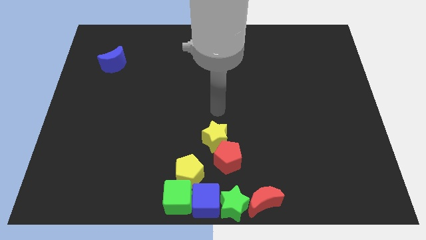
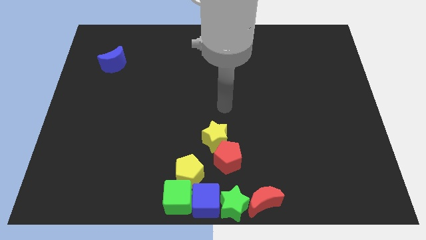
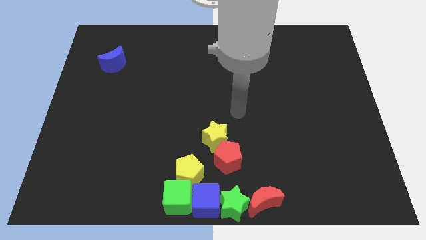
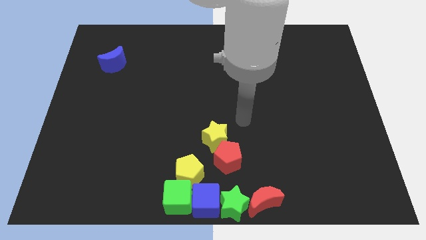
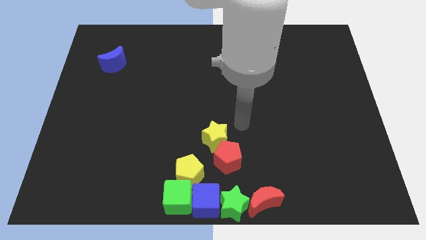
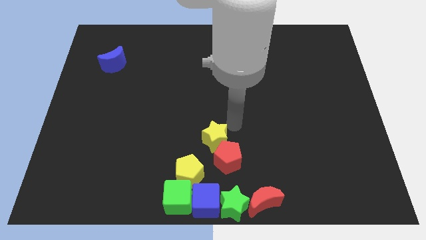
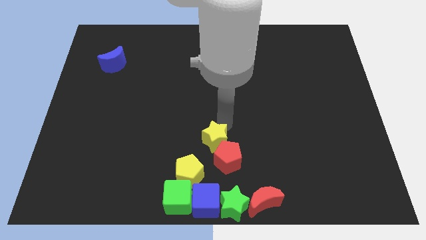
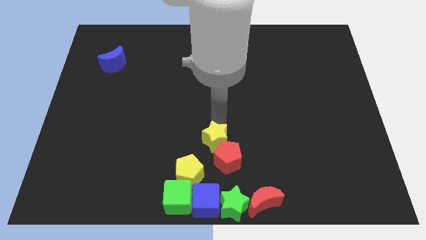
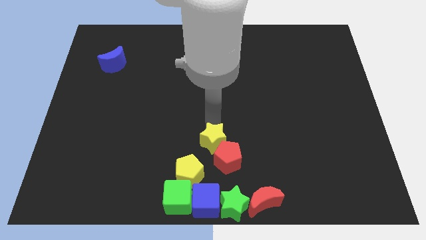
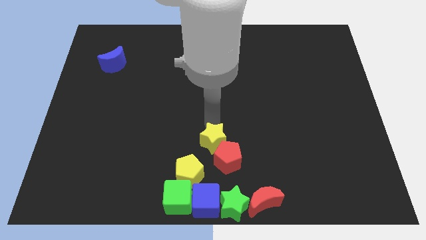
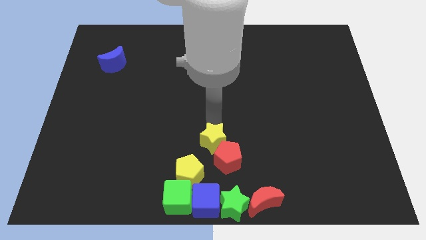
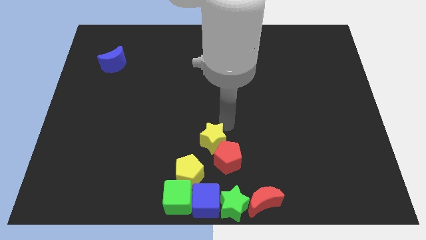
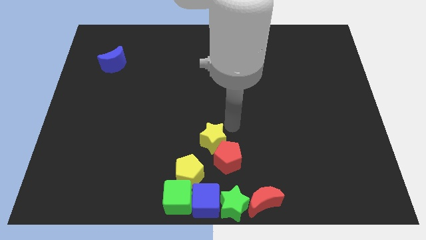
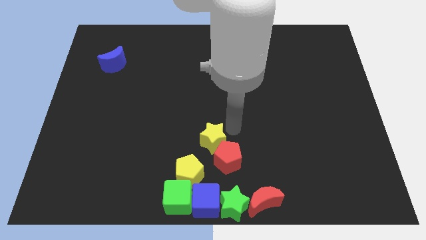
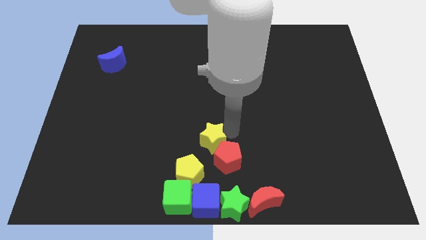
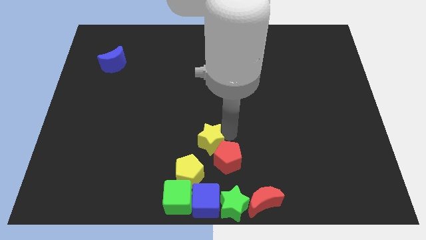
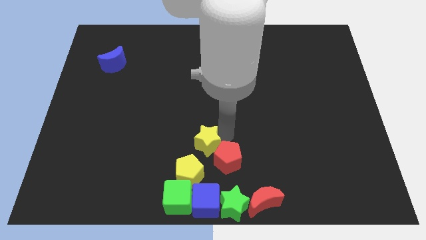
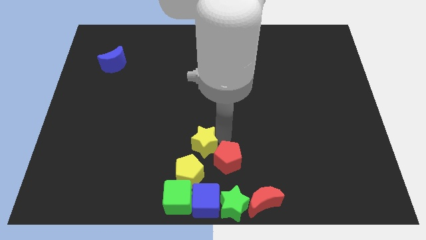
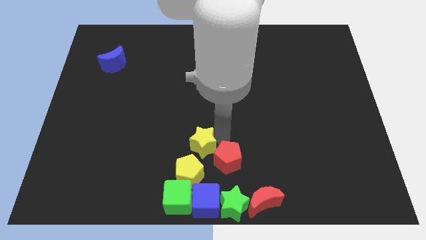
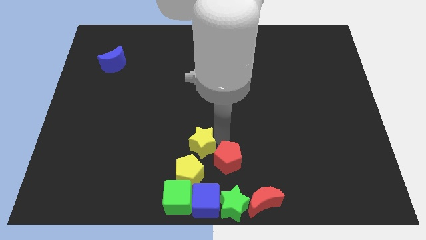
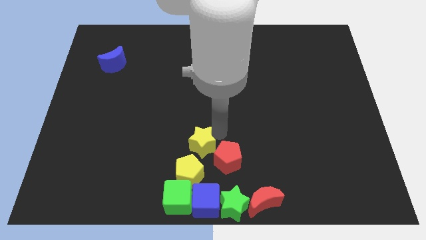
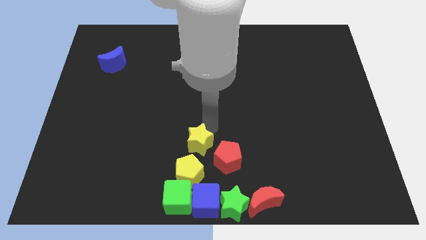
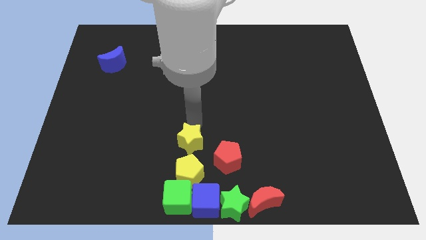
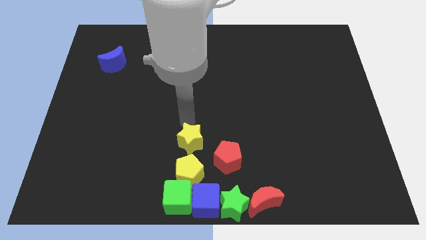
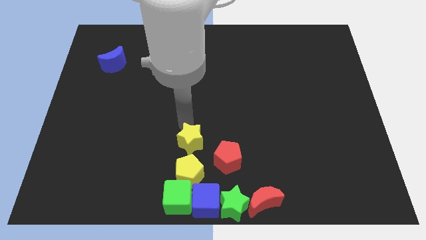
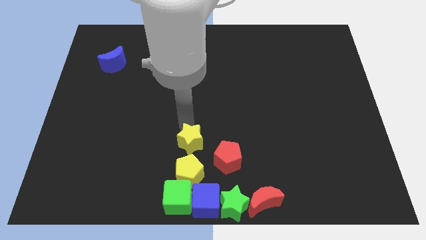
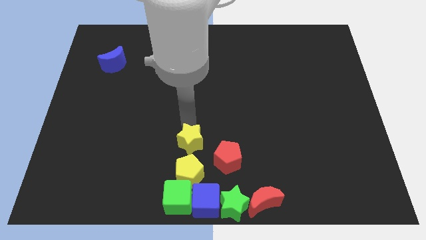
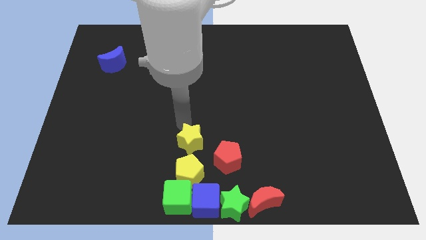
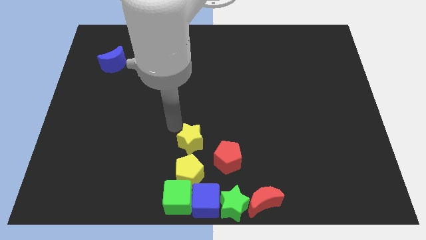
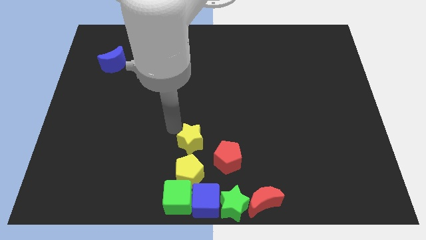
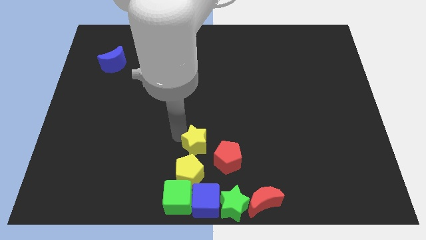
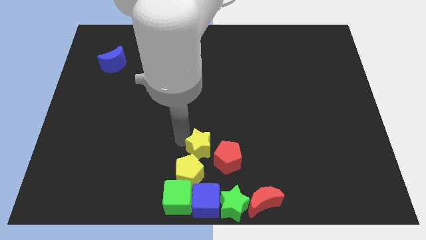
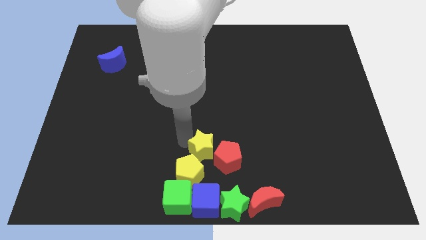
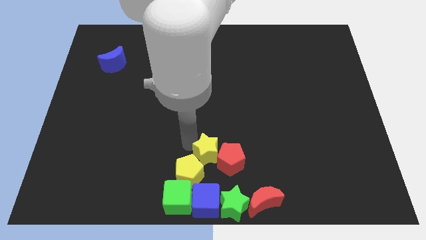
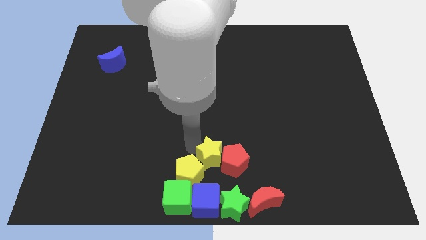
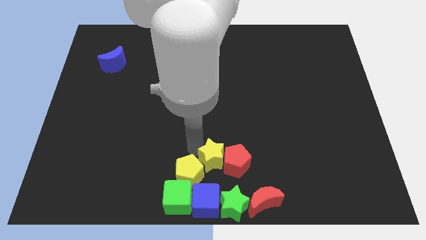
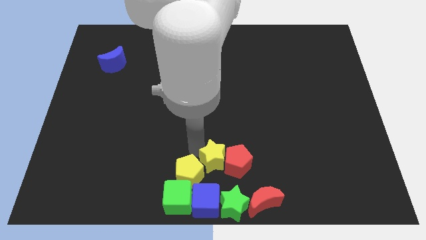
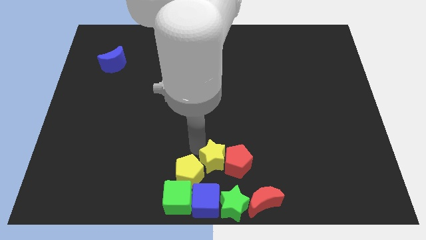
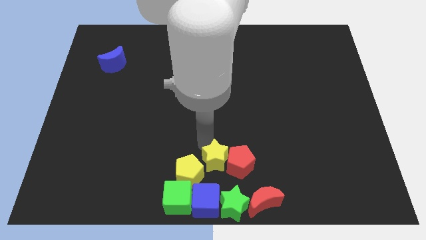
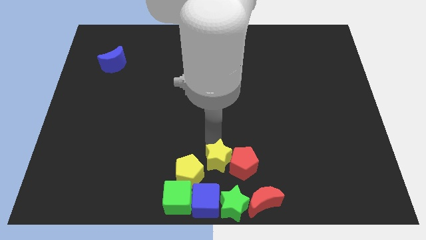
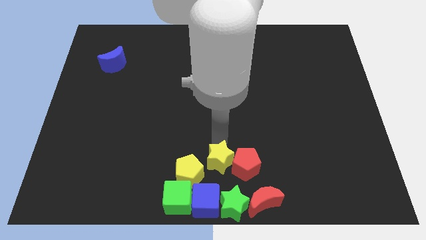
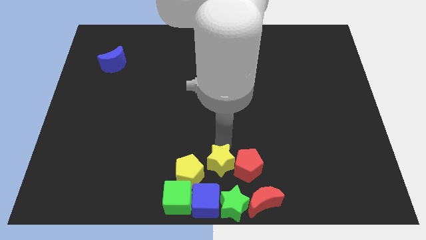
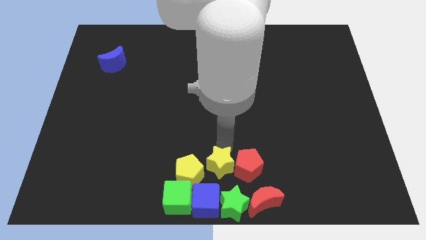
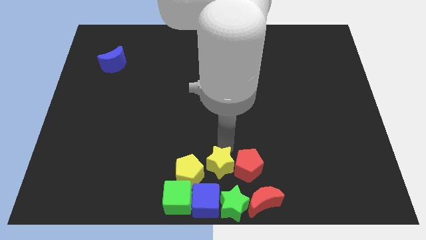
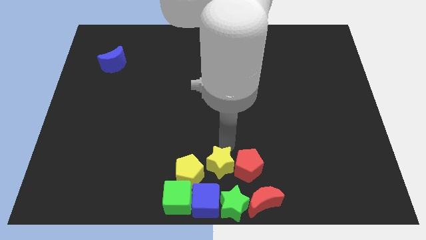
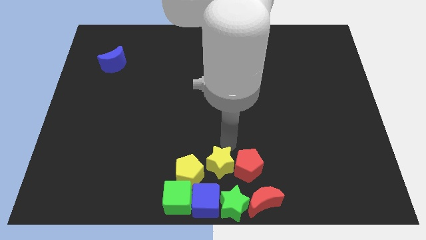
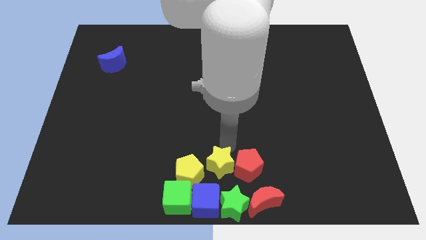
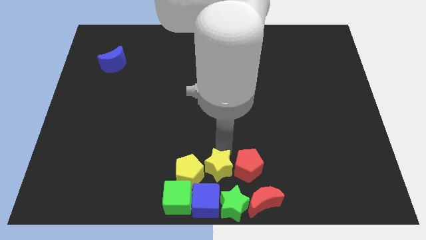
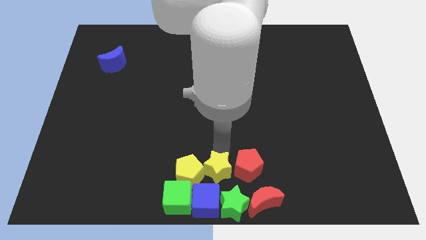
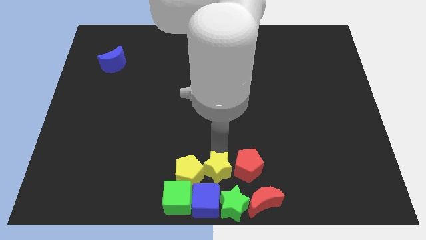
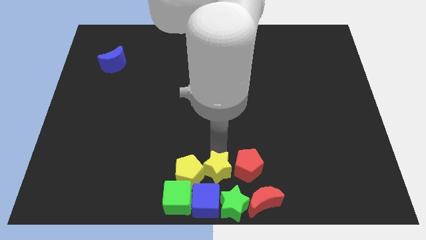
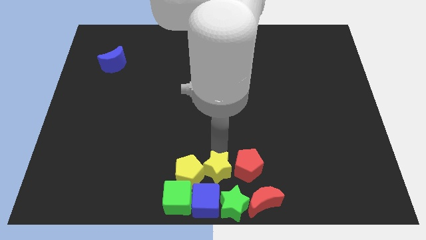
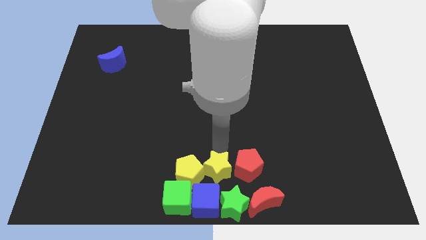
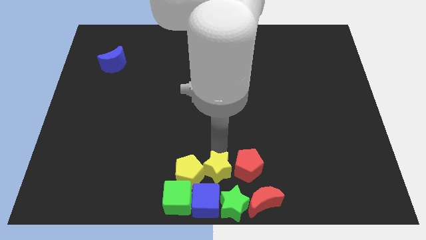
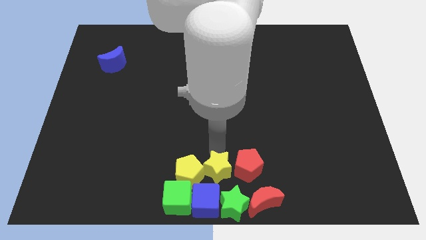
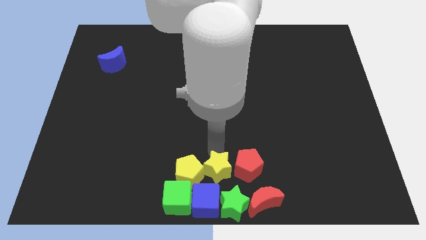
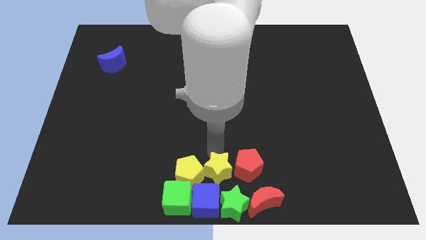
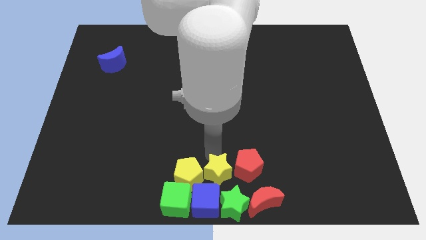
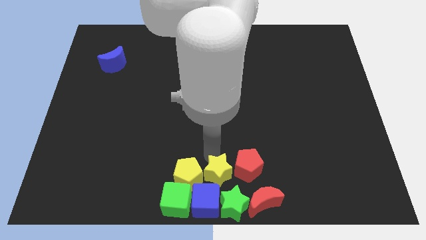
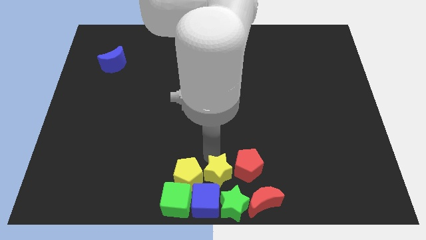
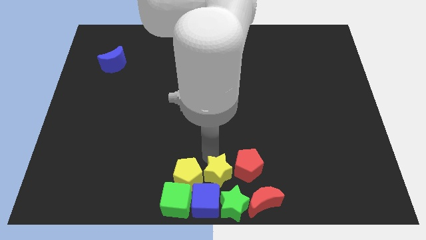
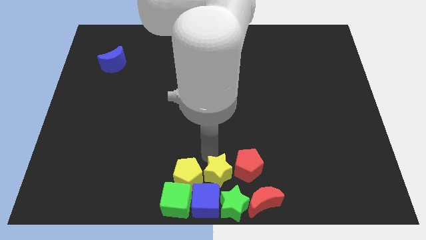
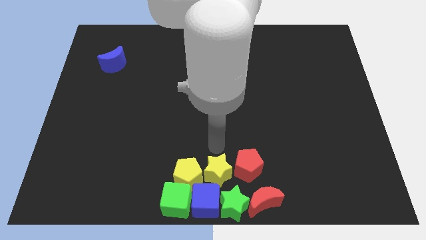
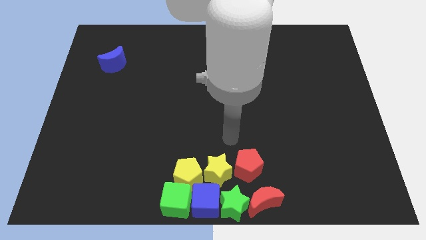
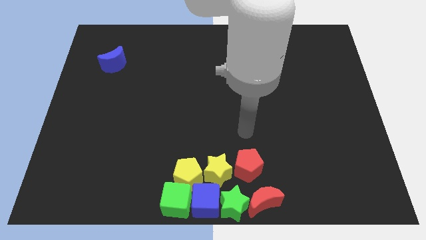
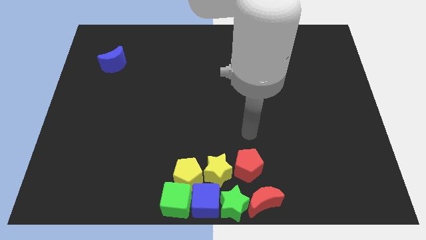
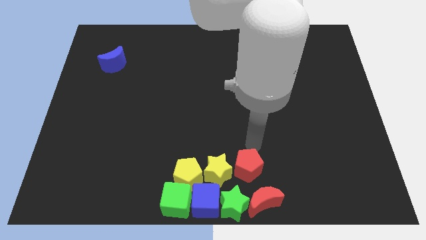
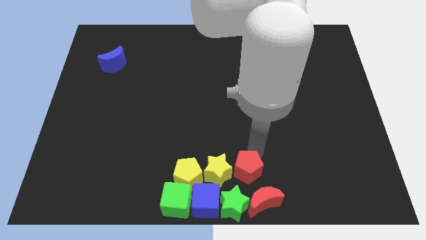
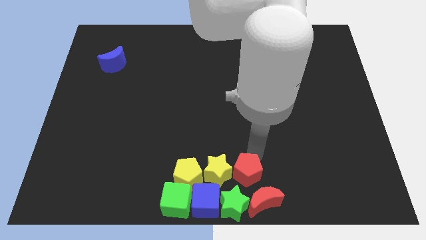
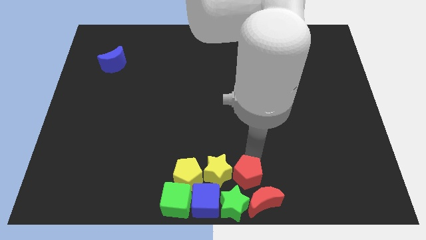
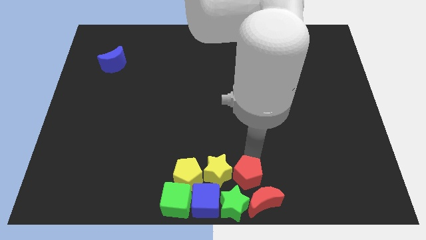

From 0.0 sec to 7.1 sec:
move yellow star and red pentagon to the right of the yellow pentagon

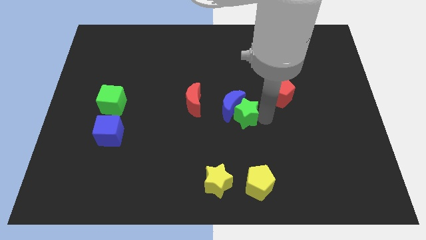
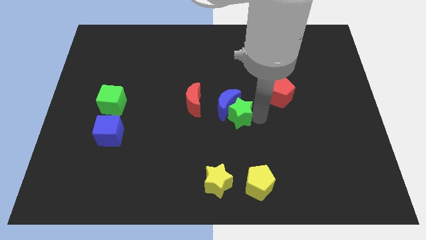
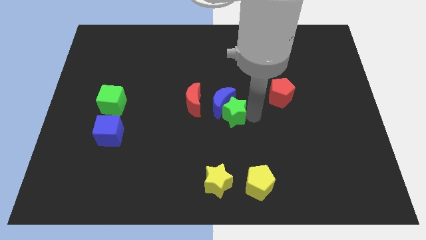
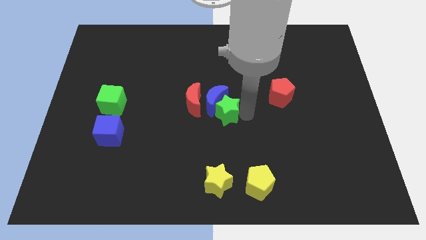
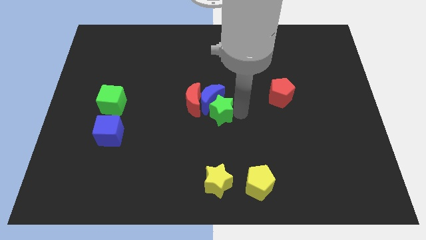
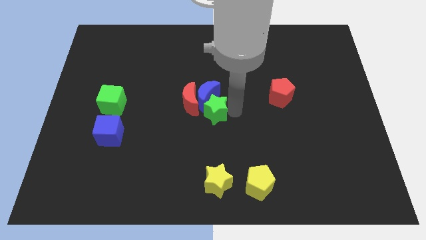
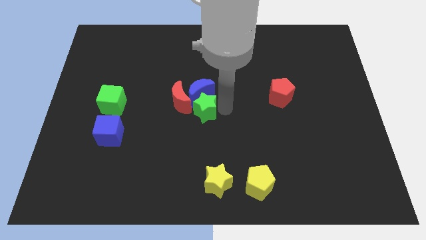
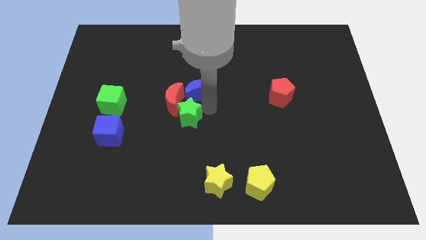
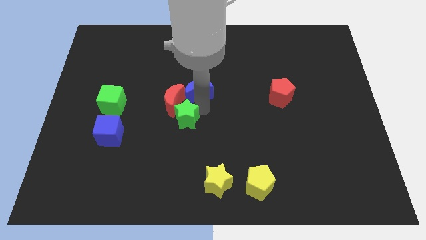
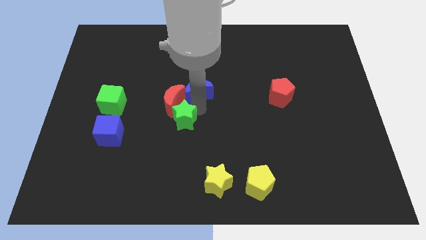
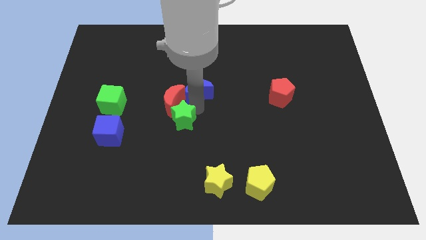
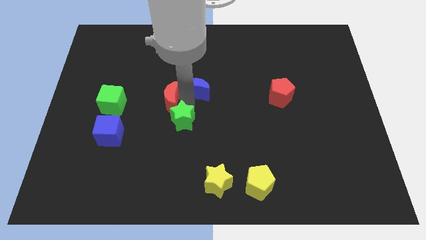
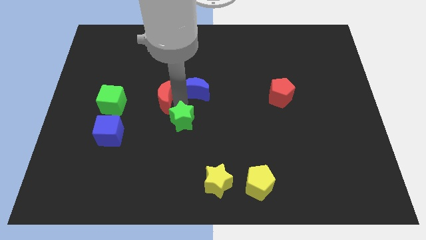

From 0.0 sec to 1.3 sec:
place the green star at the bottom of the blue crescent

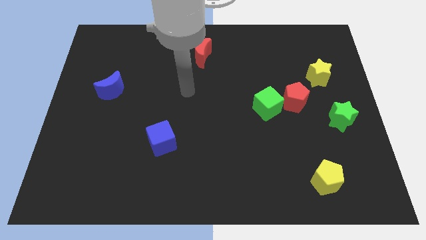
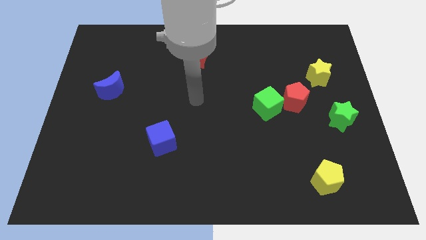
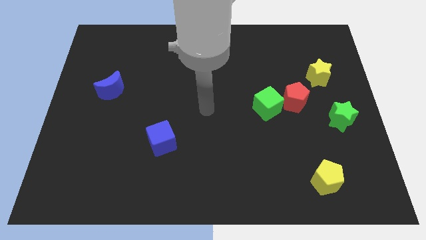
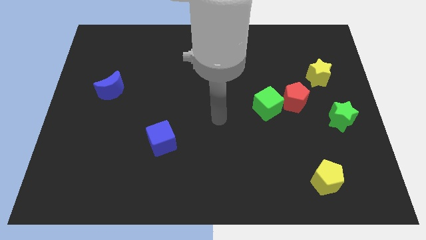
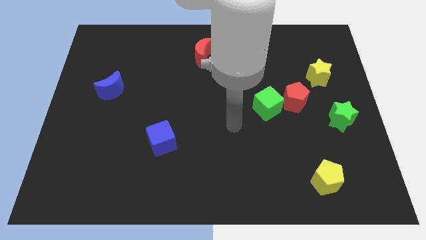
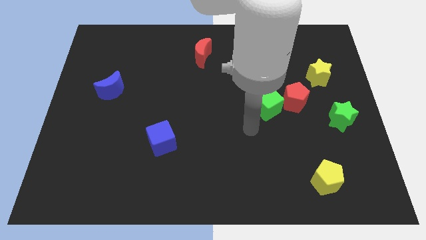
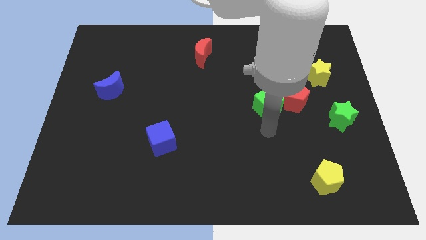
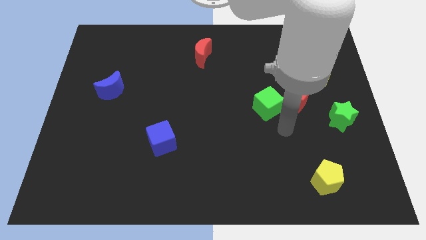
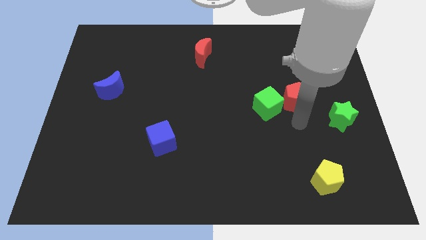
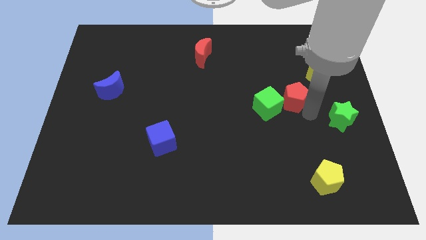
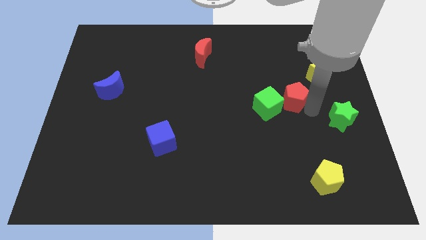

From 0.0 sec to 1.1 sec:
move your arm towards red pentagon
